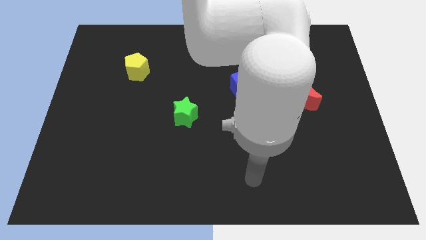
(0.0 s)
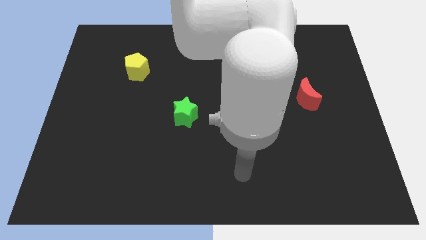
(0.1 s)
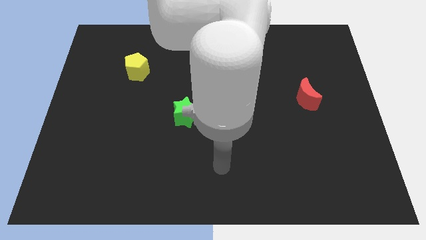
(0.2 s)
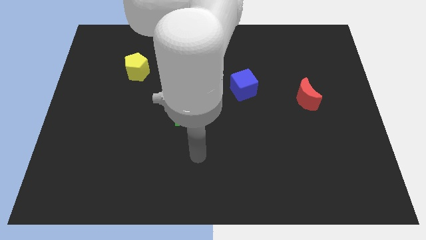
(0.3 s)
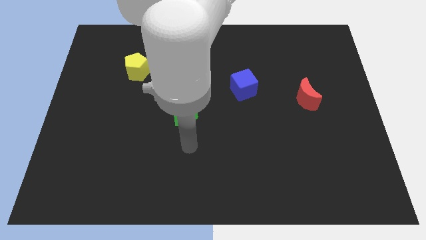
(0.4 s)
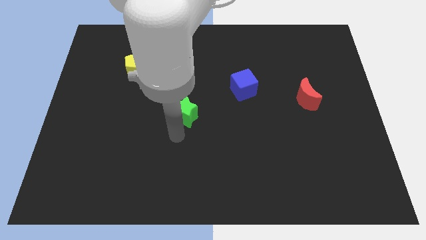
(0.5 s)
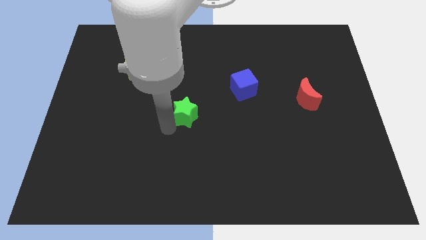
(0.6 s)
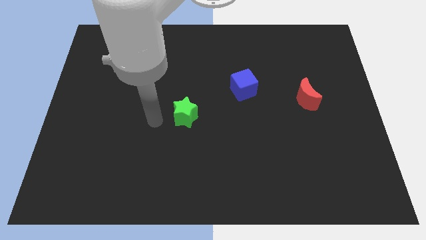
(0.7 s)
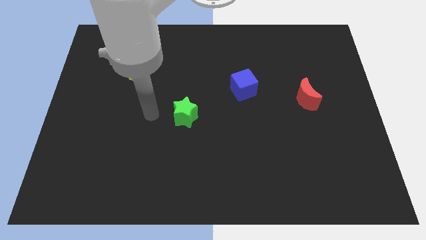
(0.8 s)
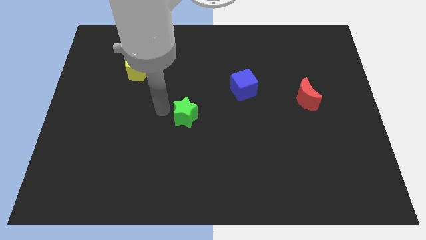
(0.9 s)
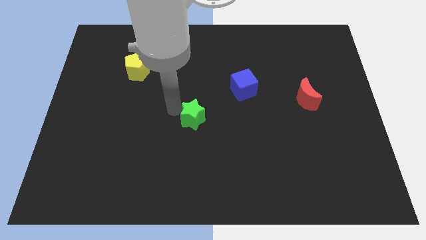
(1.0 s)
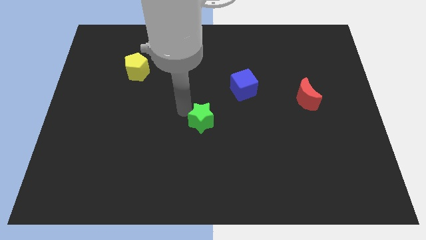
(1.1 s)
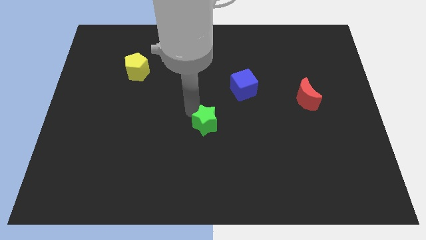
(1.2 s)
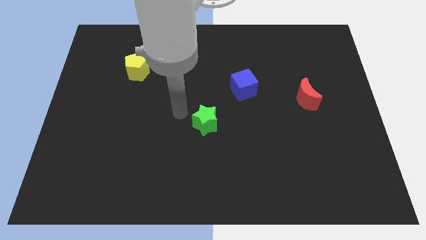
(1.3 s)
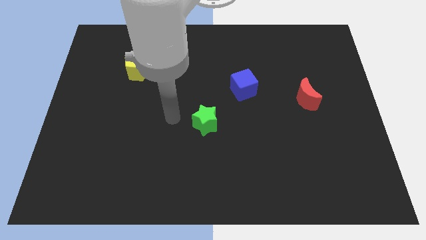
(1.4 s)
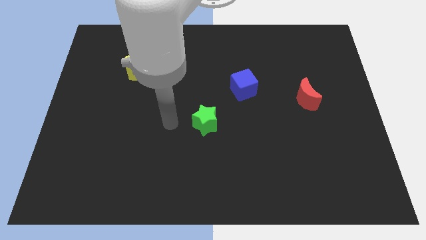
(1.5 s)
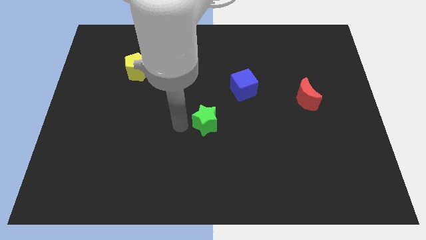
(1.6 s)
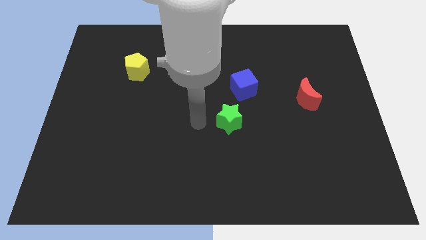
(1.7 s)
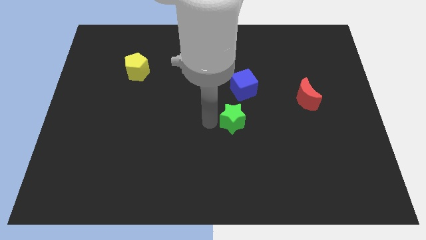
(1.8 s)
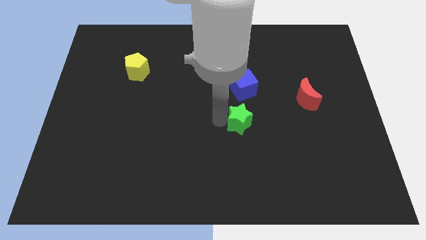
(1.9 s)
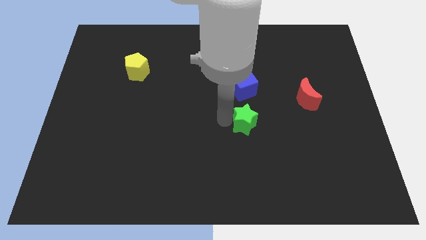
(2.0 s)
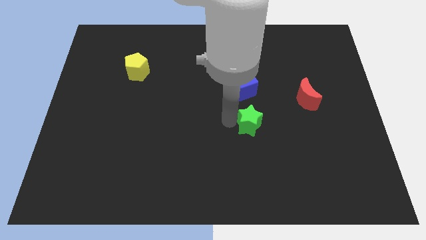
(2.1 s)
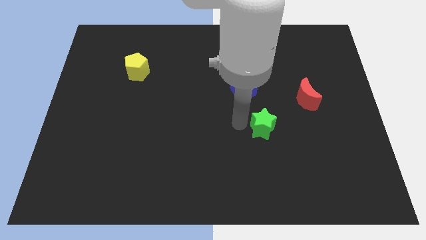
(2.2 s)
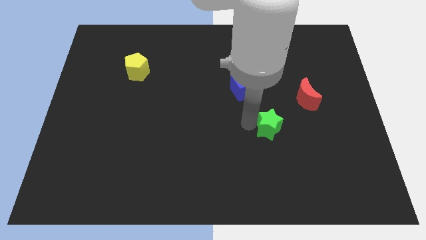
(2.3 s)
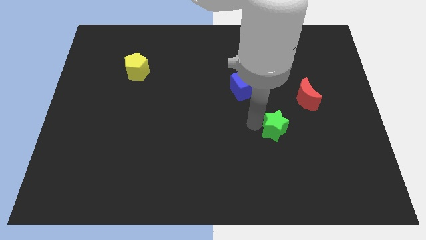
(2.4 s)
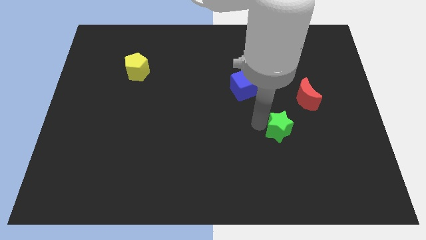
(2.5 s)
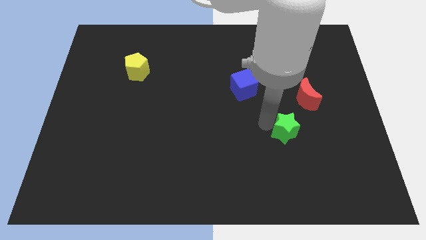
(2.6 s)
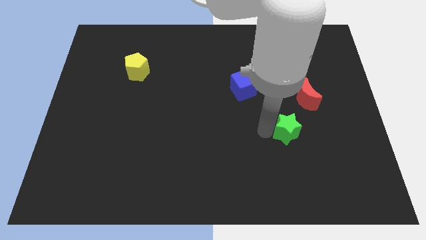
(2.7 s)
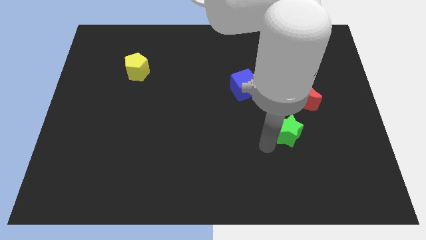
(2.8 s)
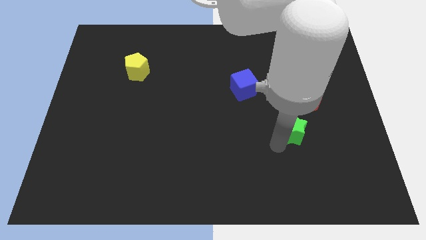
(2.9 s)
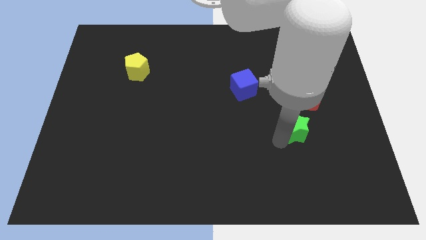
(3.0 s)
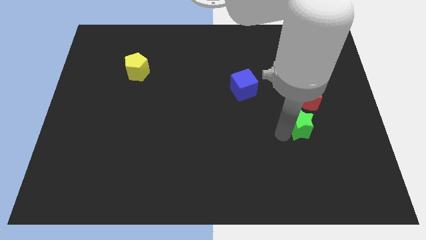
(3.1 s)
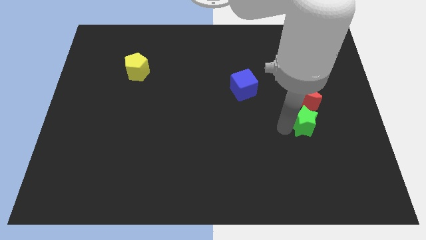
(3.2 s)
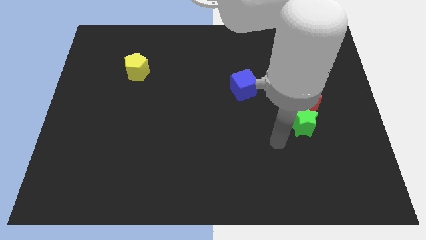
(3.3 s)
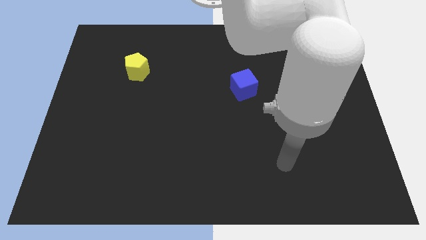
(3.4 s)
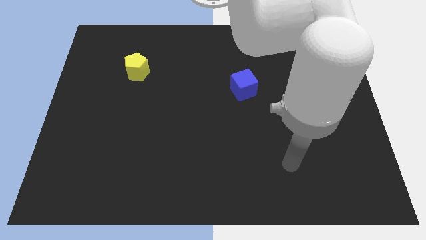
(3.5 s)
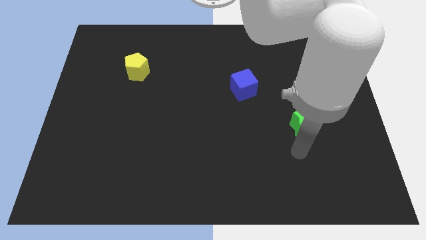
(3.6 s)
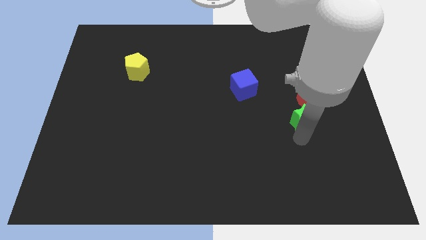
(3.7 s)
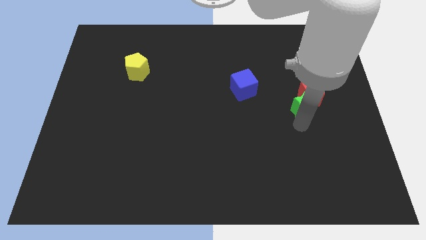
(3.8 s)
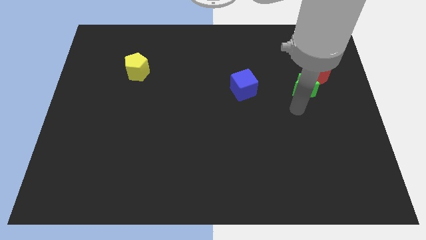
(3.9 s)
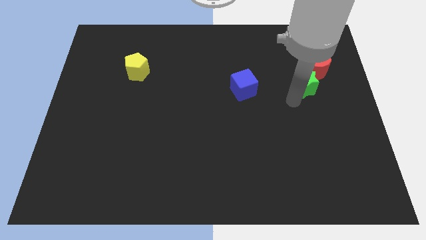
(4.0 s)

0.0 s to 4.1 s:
put the star next to the red moon

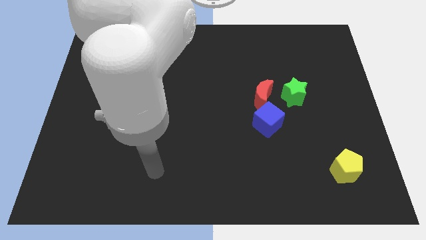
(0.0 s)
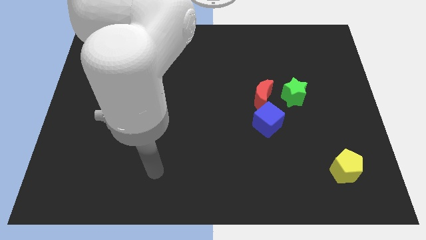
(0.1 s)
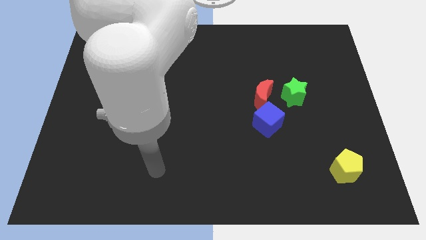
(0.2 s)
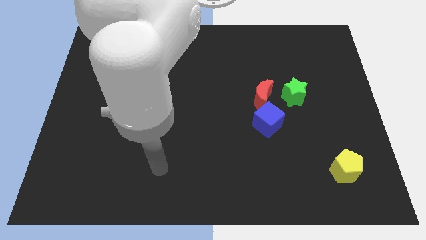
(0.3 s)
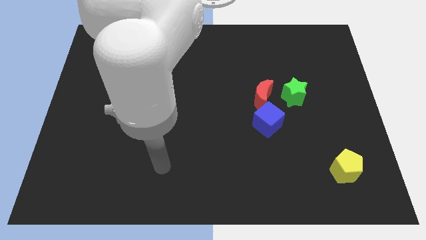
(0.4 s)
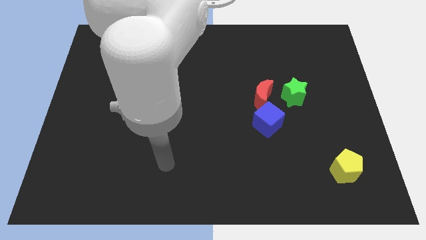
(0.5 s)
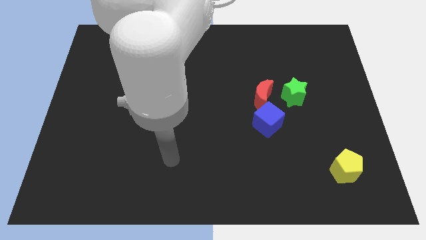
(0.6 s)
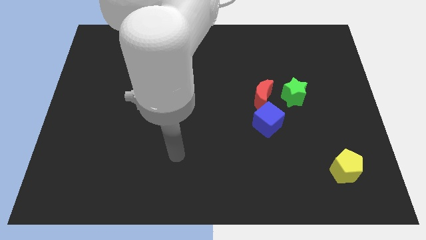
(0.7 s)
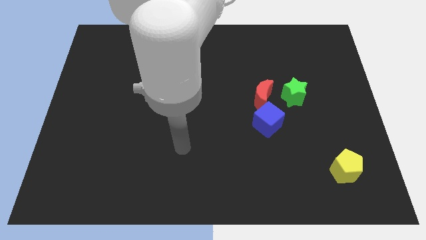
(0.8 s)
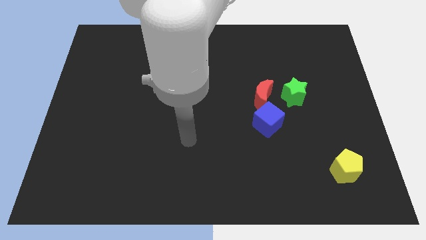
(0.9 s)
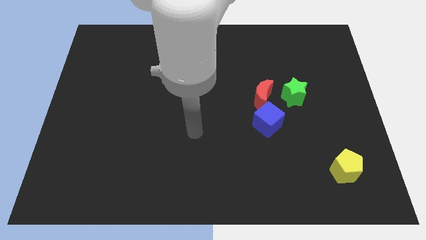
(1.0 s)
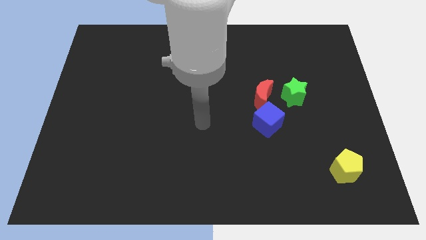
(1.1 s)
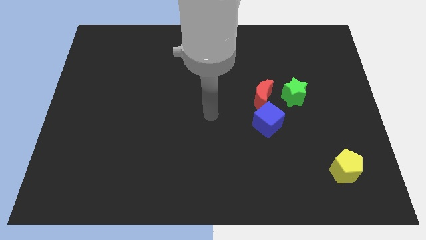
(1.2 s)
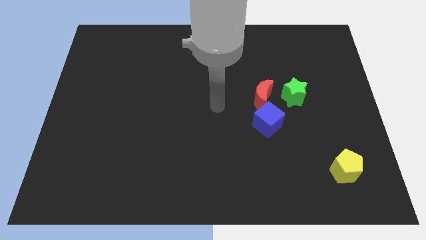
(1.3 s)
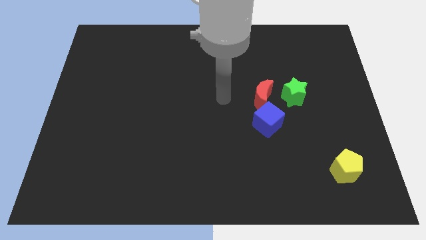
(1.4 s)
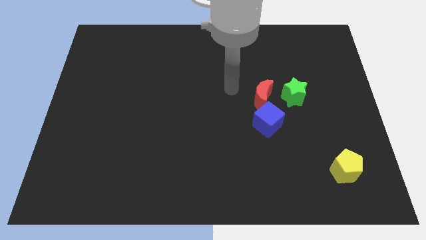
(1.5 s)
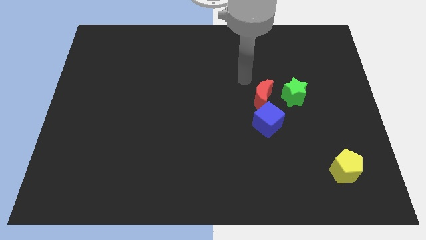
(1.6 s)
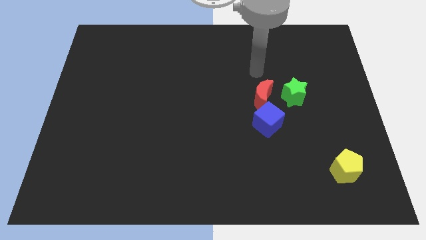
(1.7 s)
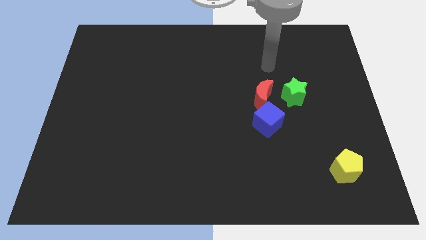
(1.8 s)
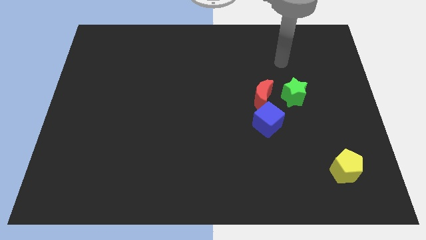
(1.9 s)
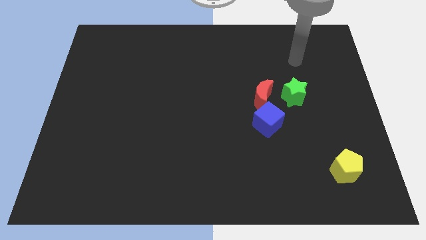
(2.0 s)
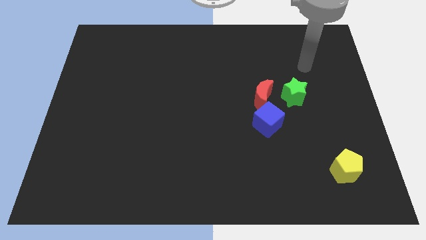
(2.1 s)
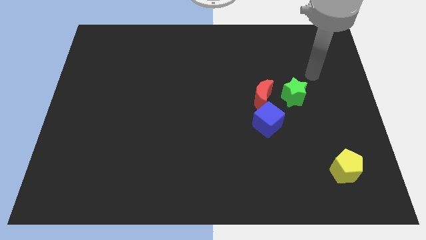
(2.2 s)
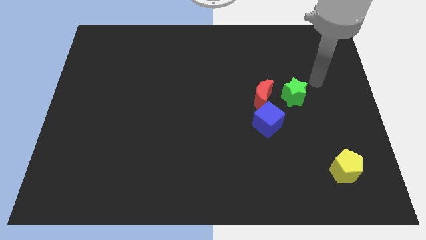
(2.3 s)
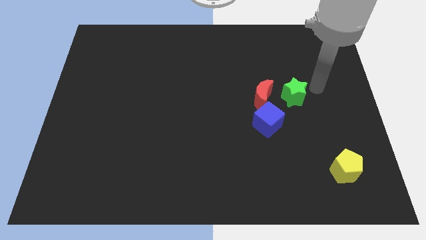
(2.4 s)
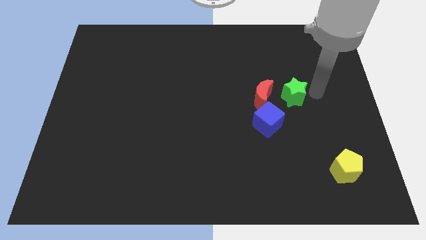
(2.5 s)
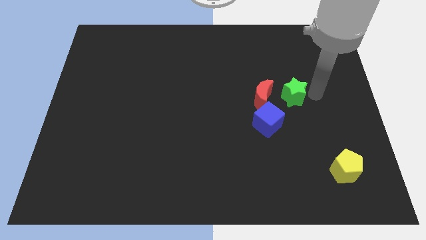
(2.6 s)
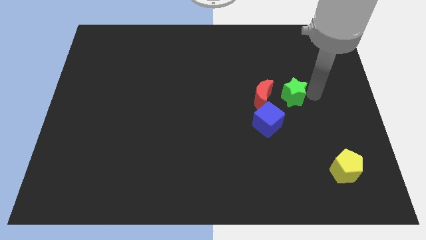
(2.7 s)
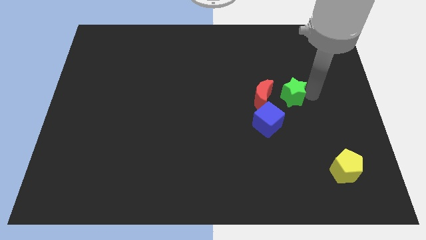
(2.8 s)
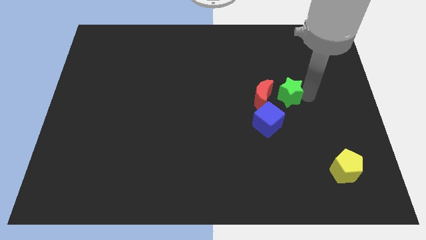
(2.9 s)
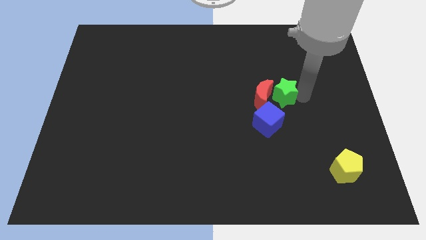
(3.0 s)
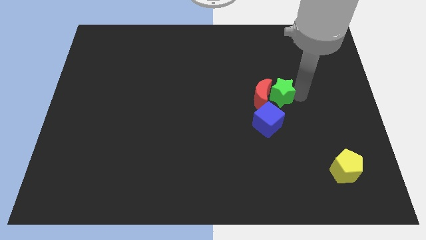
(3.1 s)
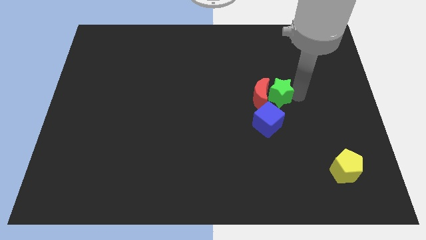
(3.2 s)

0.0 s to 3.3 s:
put the green star to the red moon

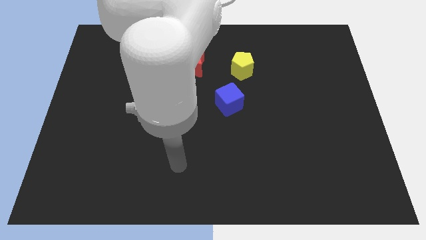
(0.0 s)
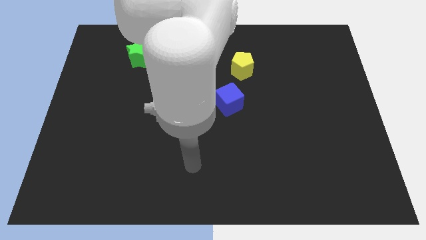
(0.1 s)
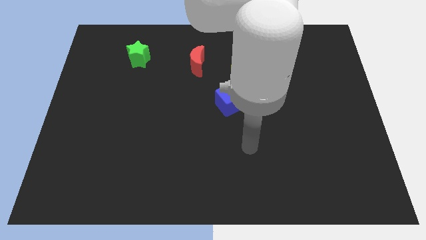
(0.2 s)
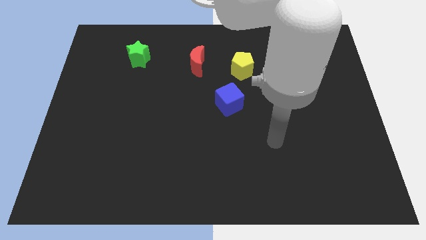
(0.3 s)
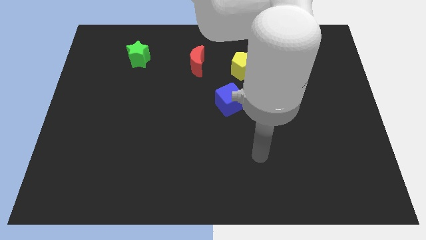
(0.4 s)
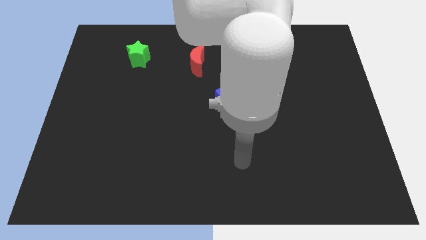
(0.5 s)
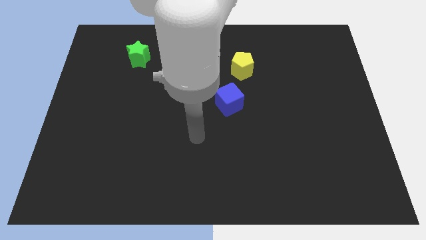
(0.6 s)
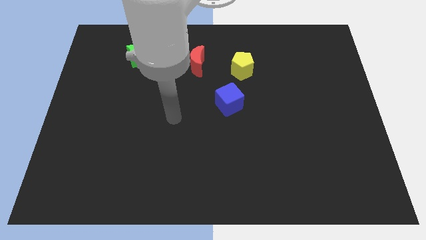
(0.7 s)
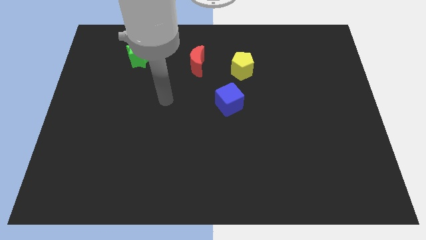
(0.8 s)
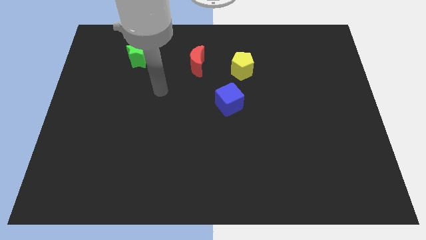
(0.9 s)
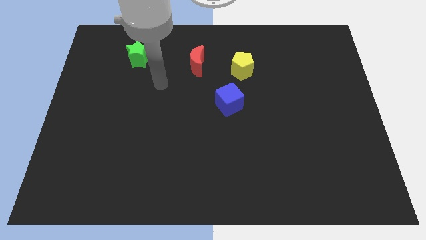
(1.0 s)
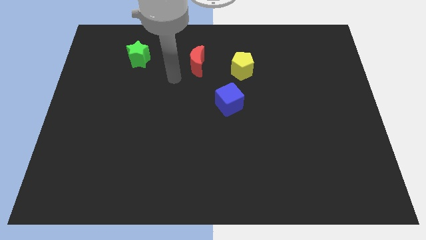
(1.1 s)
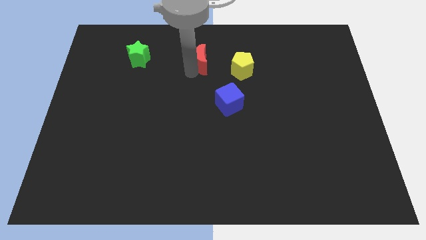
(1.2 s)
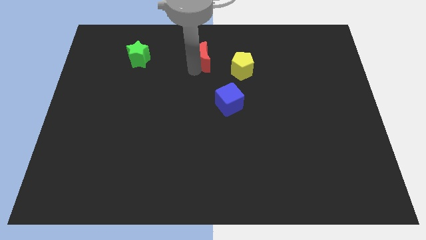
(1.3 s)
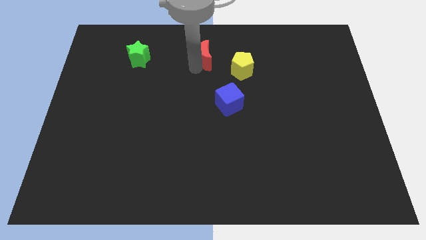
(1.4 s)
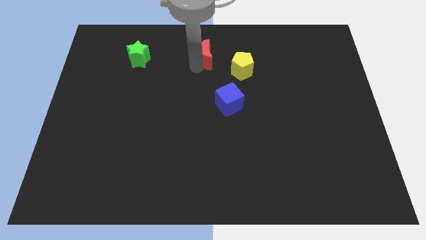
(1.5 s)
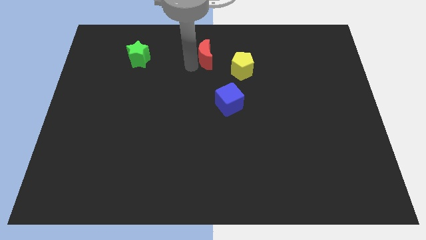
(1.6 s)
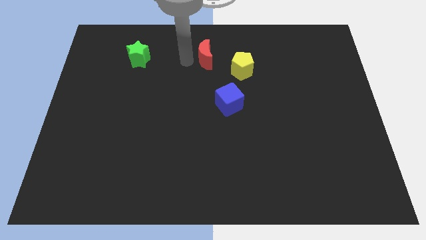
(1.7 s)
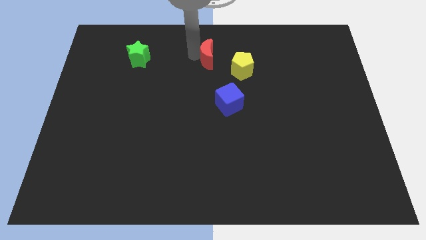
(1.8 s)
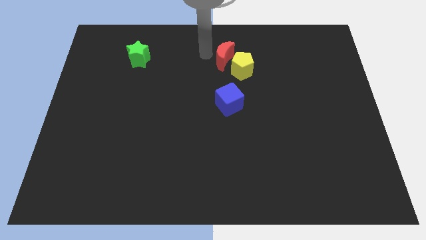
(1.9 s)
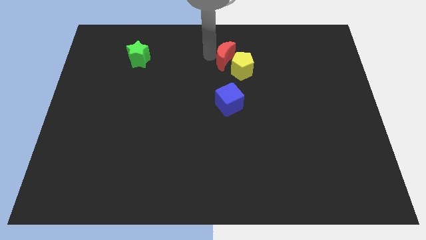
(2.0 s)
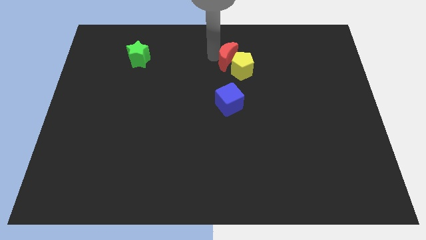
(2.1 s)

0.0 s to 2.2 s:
push the red moon to the yellow block
